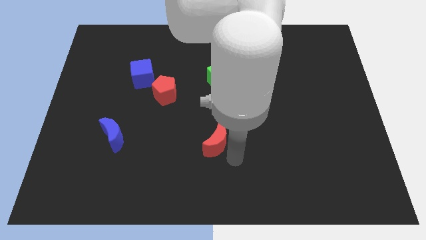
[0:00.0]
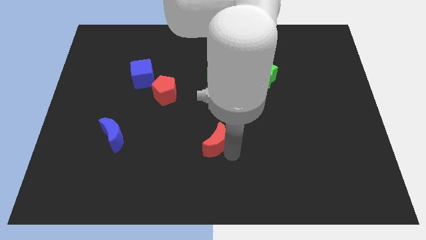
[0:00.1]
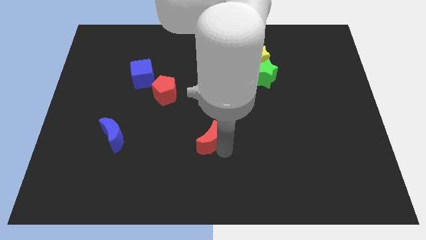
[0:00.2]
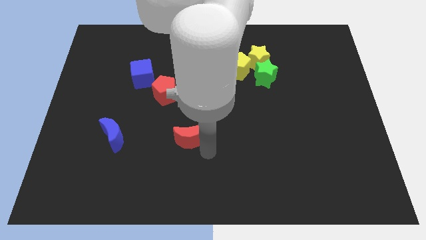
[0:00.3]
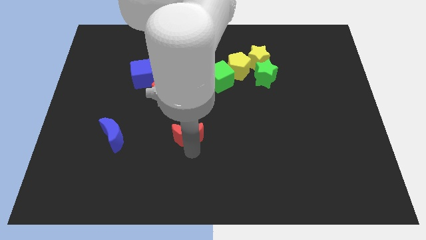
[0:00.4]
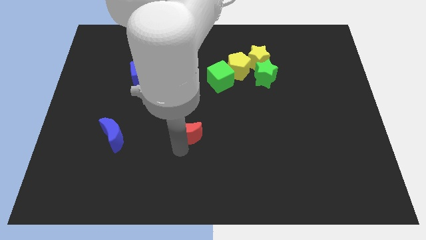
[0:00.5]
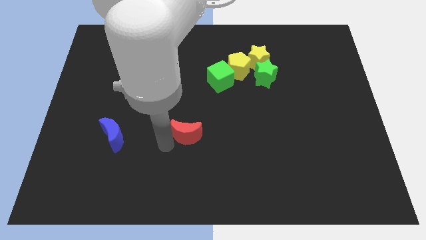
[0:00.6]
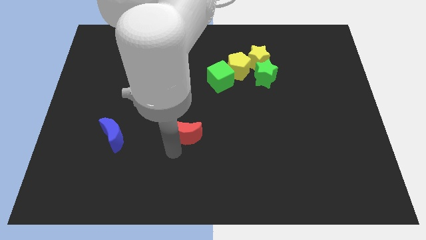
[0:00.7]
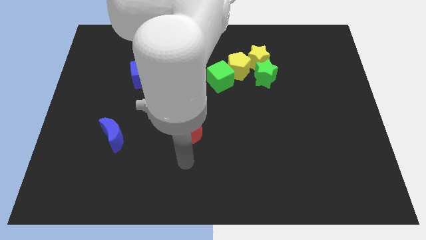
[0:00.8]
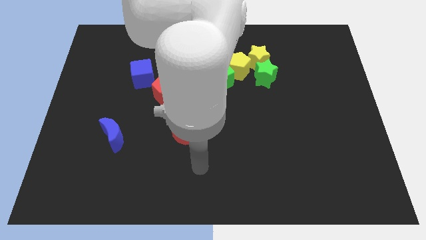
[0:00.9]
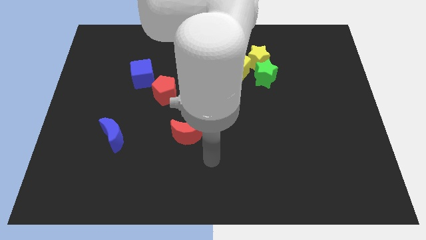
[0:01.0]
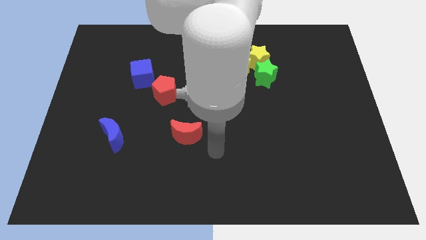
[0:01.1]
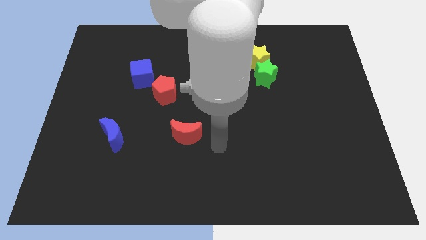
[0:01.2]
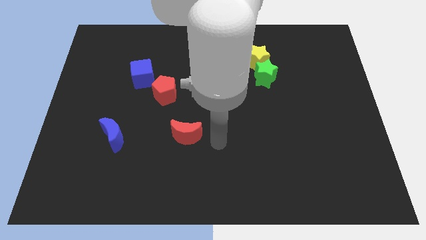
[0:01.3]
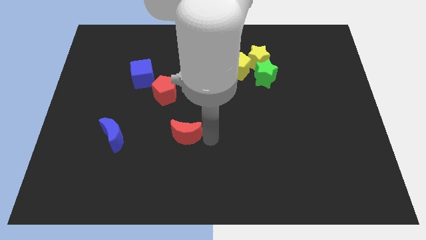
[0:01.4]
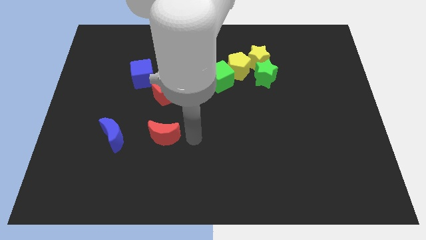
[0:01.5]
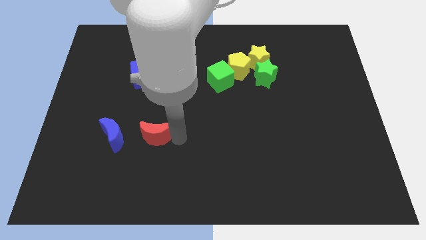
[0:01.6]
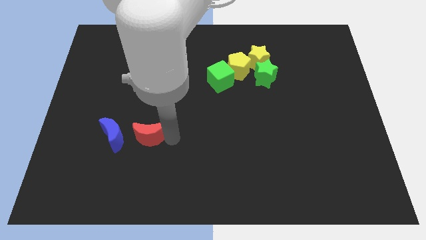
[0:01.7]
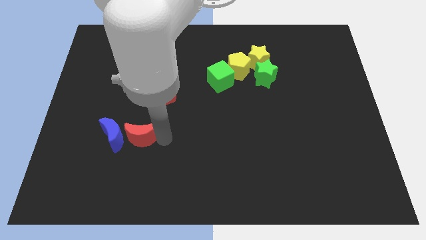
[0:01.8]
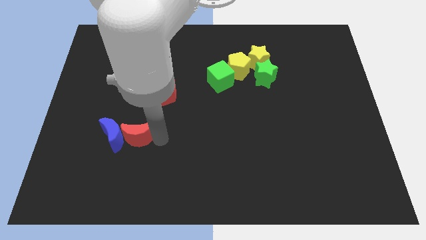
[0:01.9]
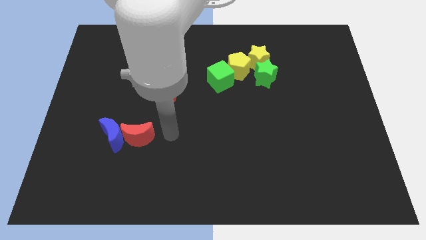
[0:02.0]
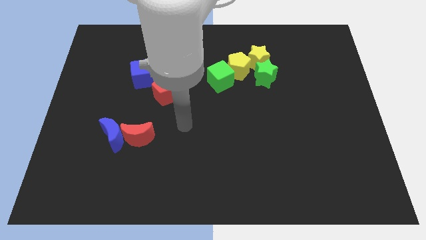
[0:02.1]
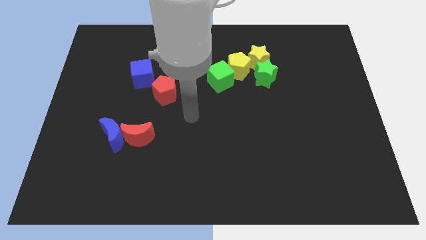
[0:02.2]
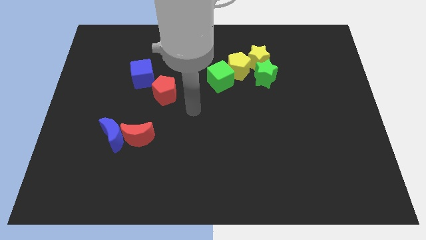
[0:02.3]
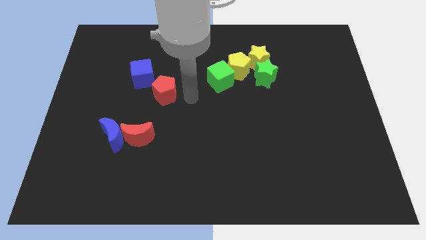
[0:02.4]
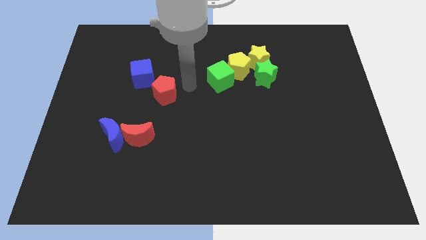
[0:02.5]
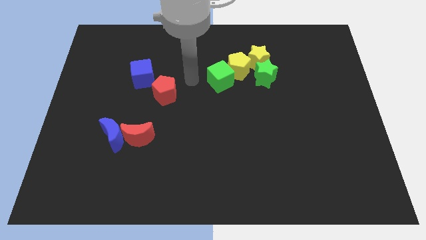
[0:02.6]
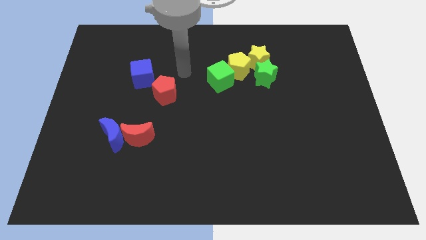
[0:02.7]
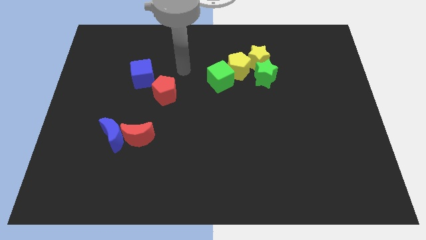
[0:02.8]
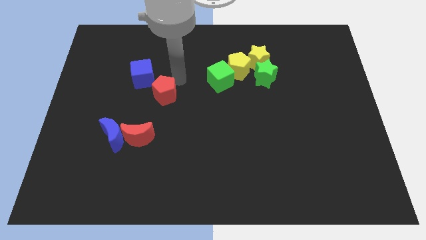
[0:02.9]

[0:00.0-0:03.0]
move the red crescent close to the blue crescent

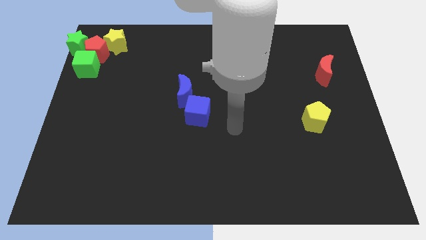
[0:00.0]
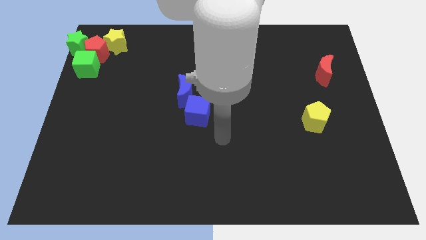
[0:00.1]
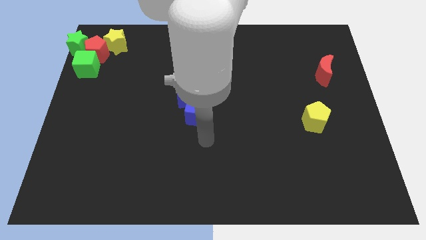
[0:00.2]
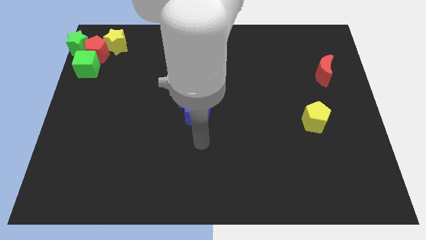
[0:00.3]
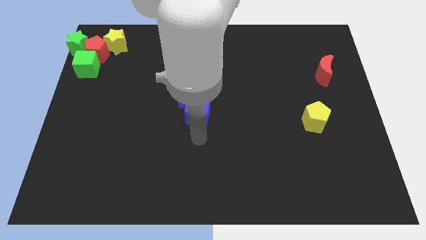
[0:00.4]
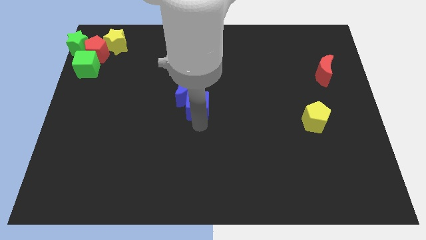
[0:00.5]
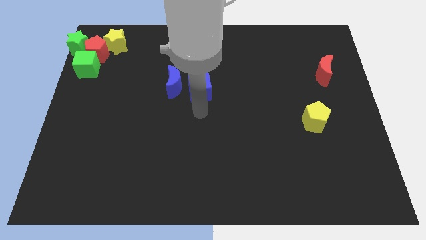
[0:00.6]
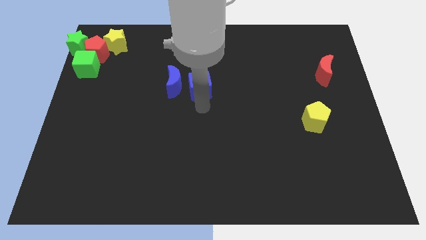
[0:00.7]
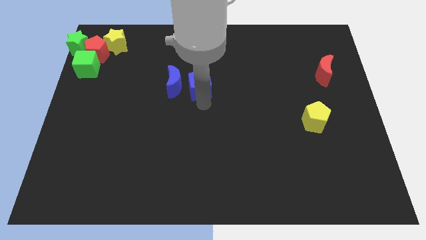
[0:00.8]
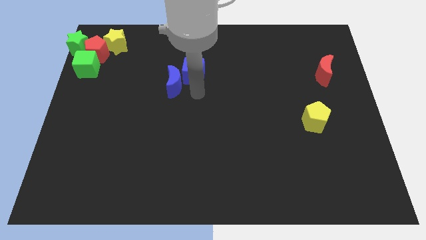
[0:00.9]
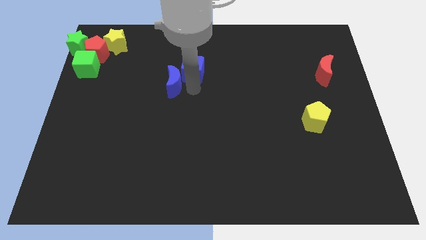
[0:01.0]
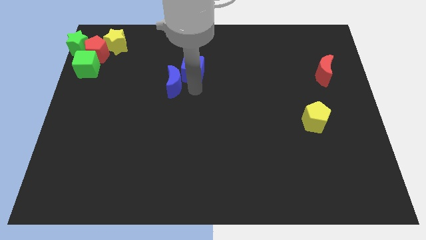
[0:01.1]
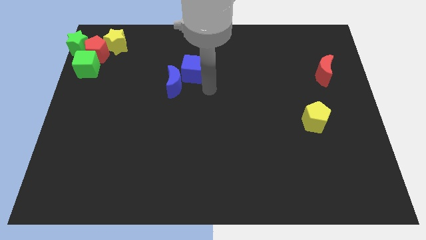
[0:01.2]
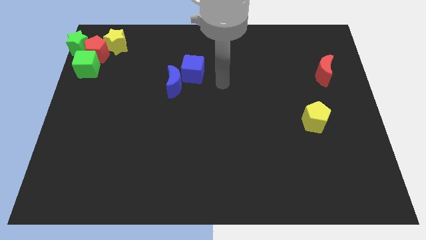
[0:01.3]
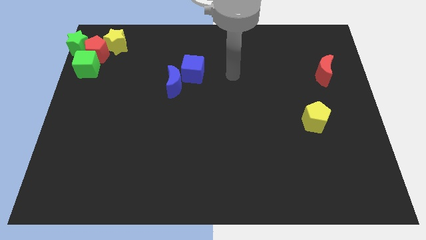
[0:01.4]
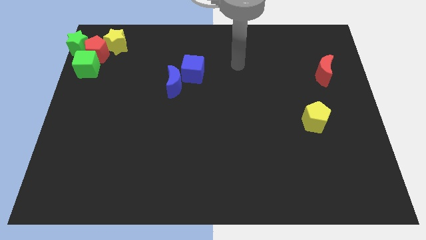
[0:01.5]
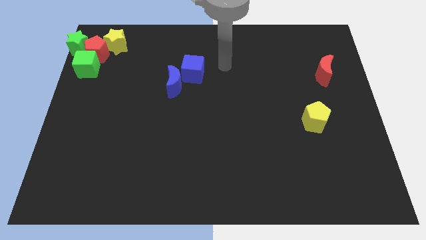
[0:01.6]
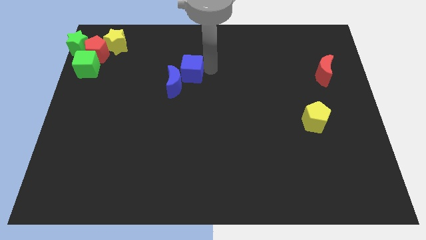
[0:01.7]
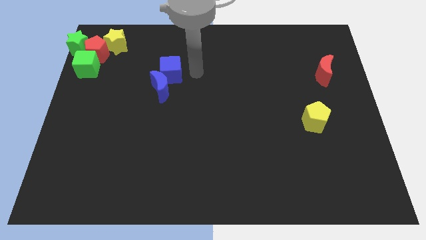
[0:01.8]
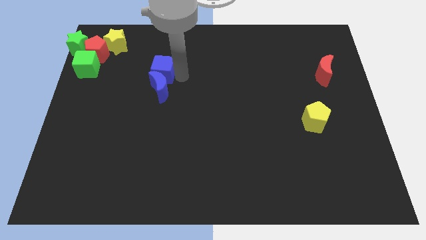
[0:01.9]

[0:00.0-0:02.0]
place the blue cube above the blue moon

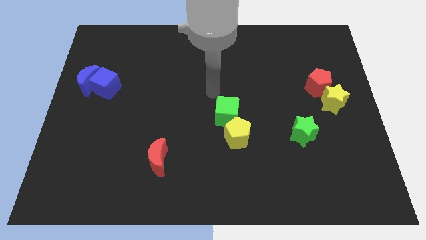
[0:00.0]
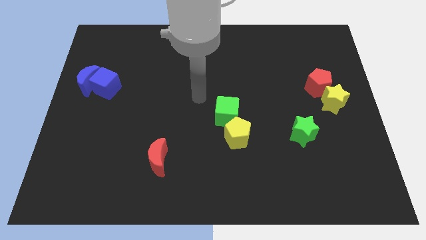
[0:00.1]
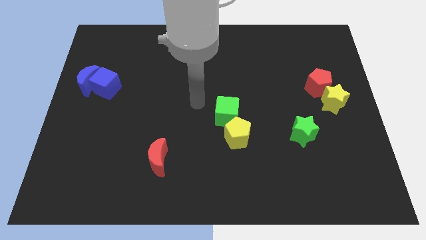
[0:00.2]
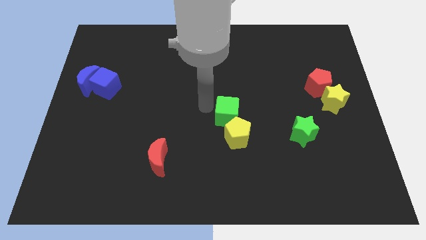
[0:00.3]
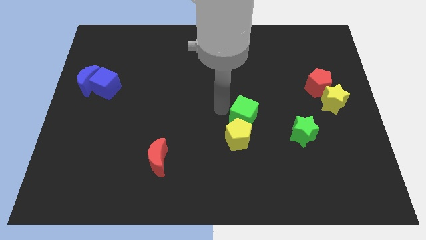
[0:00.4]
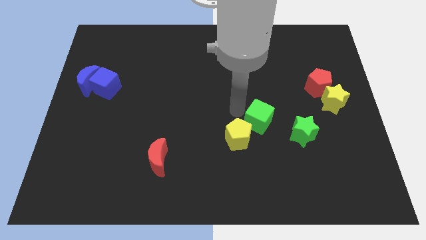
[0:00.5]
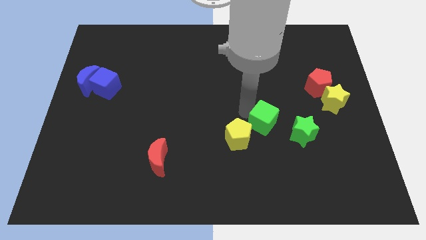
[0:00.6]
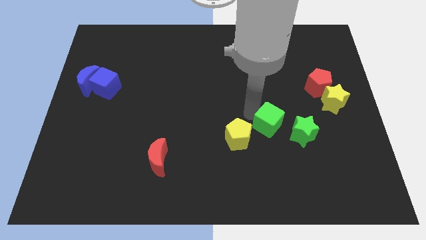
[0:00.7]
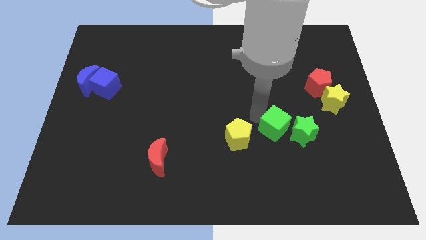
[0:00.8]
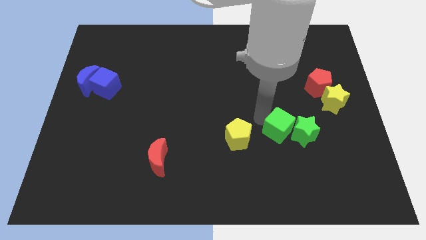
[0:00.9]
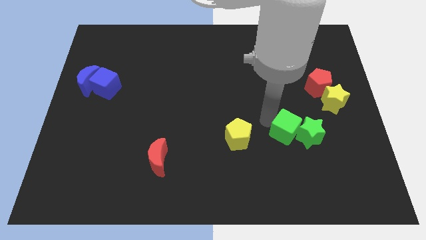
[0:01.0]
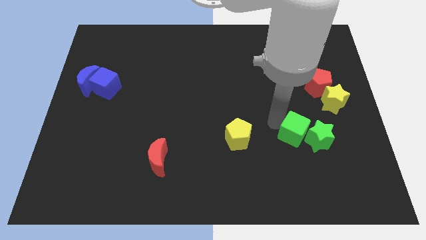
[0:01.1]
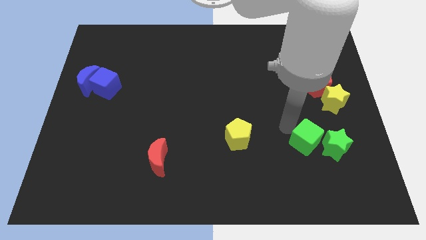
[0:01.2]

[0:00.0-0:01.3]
push the green blocks towards the right side of the board

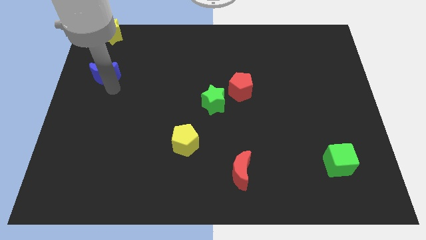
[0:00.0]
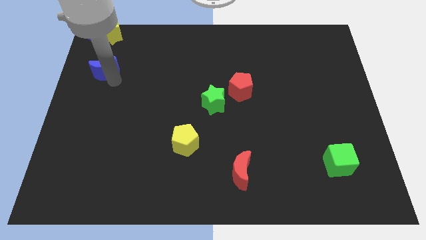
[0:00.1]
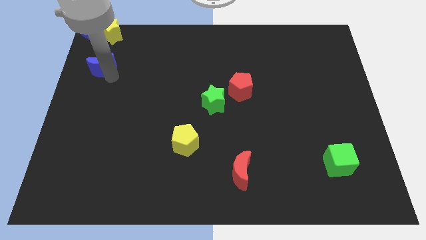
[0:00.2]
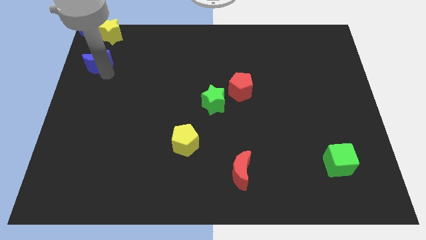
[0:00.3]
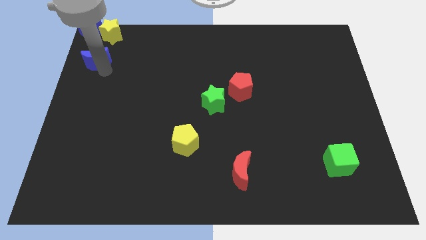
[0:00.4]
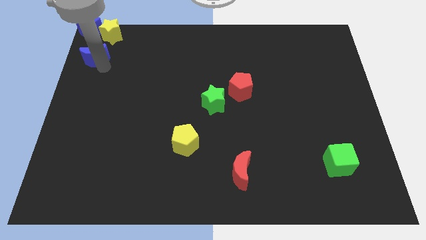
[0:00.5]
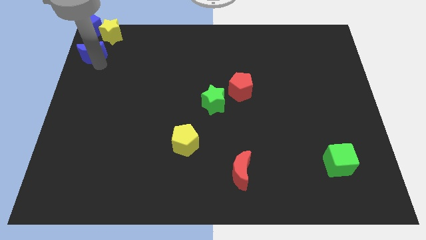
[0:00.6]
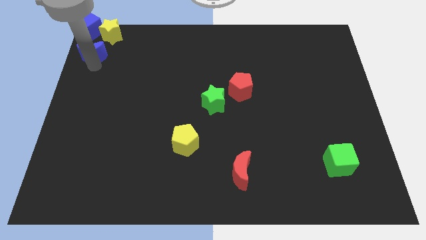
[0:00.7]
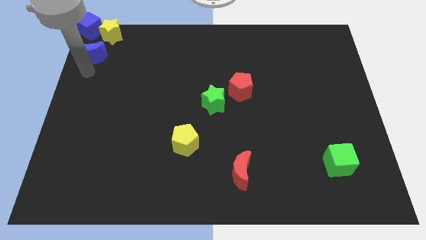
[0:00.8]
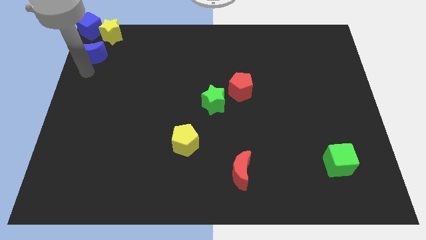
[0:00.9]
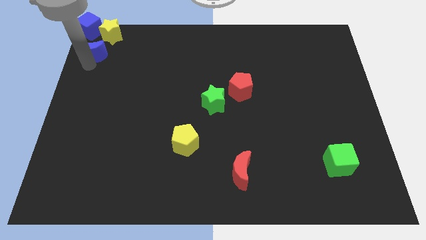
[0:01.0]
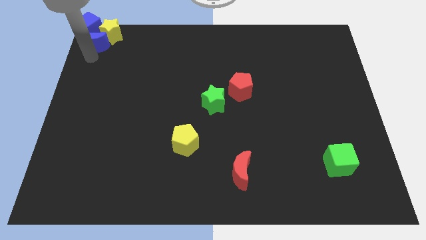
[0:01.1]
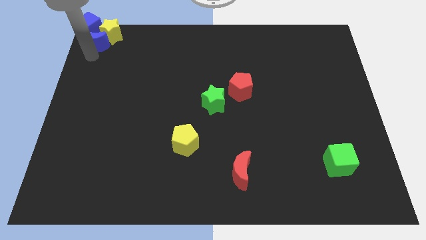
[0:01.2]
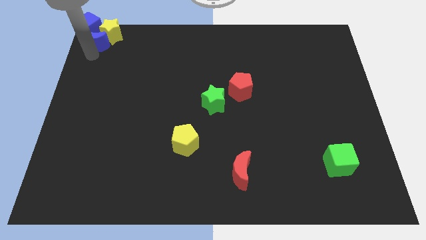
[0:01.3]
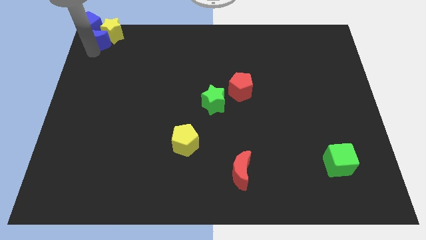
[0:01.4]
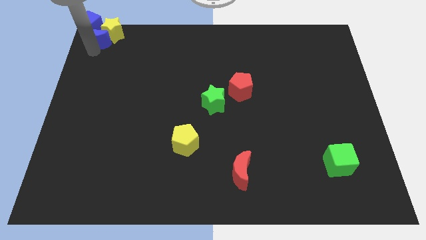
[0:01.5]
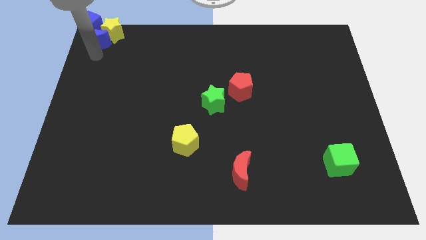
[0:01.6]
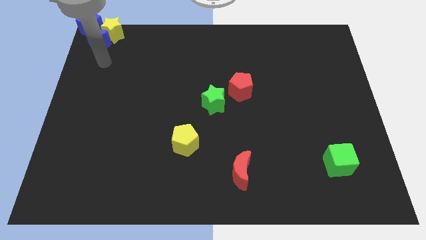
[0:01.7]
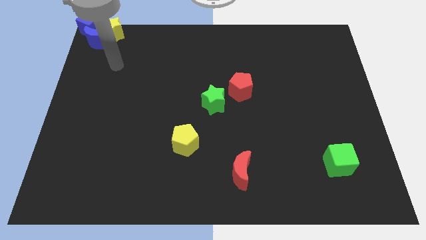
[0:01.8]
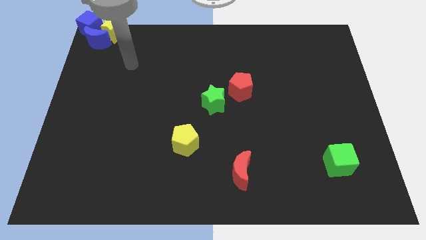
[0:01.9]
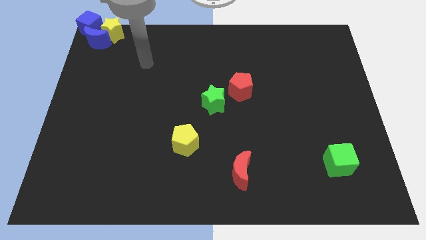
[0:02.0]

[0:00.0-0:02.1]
push the blue moon into the blue cube and the yellow star

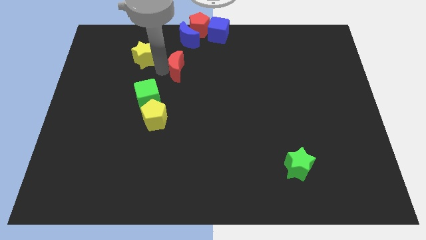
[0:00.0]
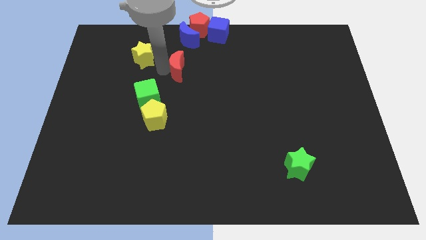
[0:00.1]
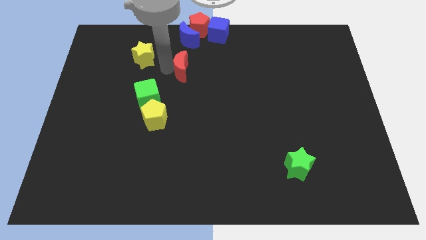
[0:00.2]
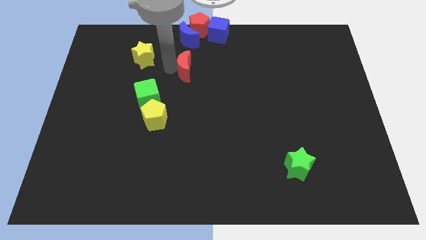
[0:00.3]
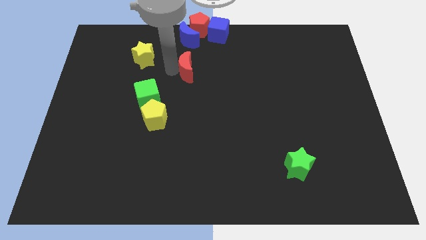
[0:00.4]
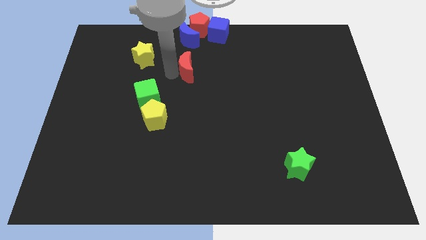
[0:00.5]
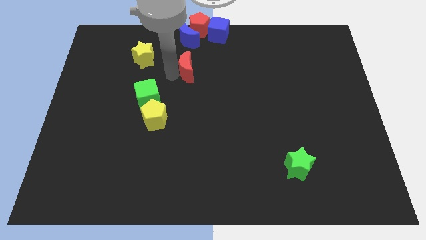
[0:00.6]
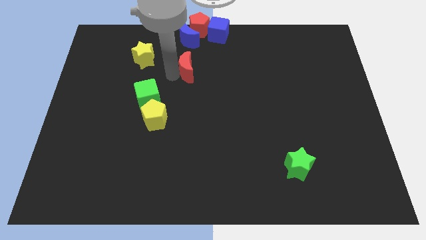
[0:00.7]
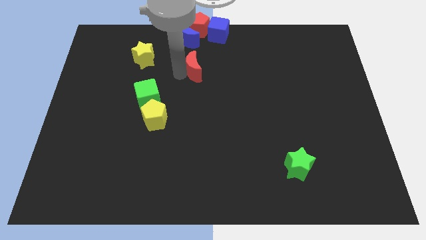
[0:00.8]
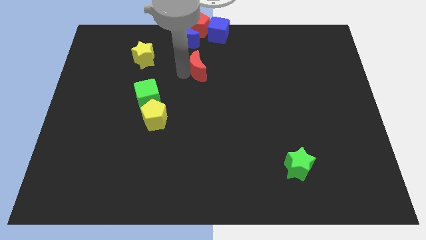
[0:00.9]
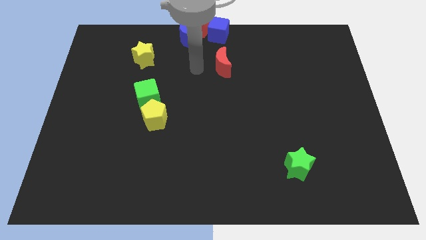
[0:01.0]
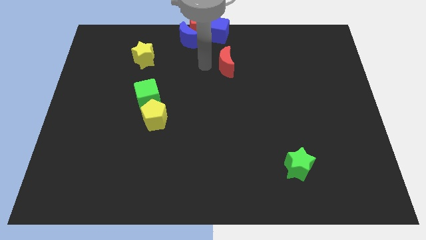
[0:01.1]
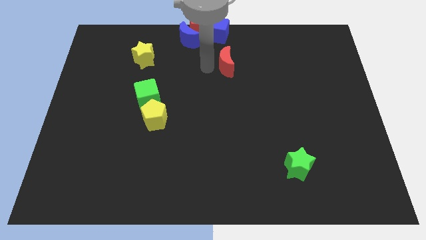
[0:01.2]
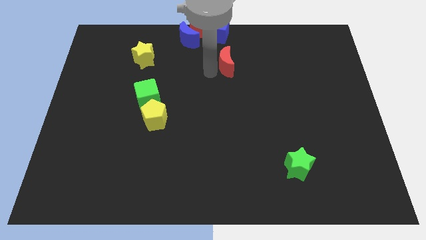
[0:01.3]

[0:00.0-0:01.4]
place the red moon down to the blue cube
